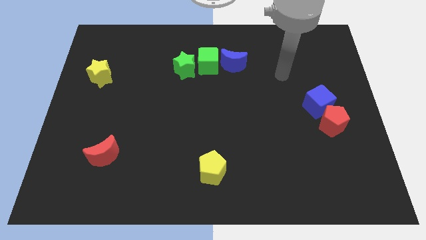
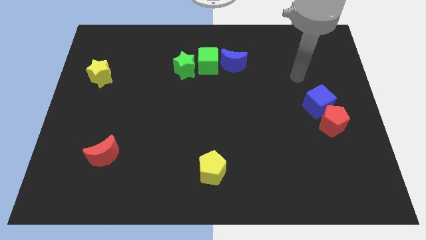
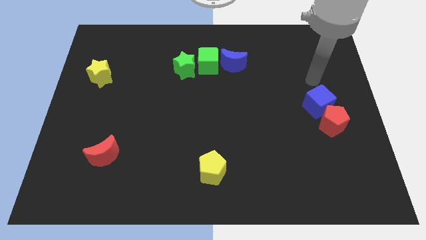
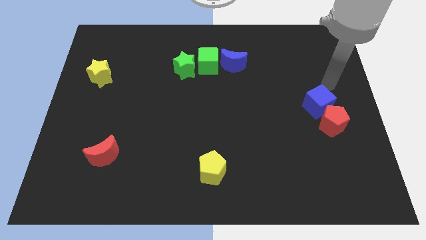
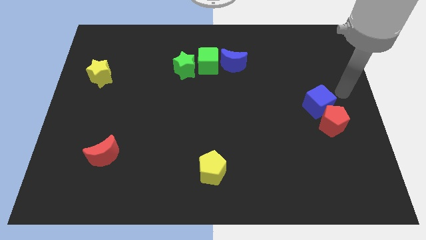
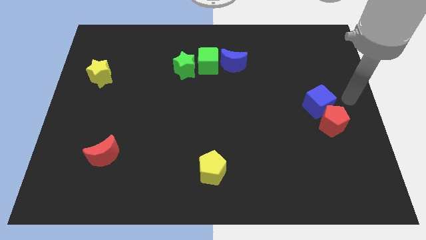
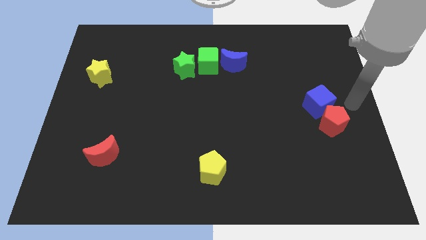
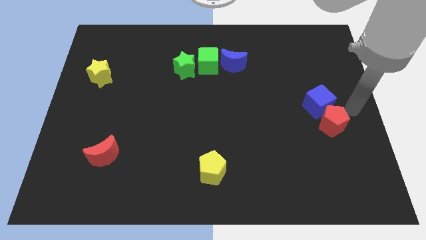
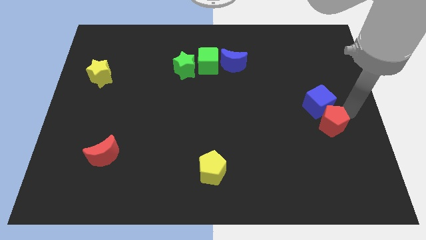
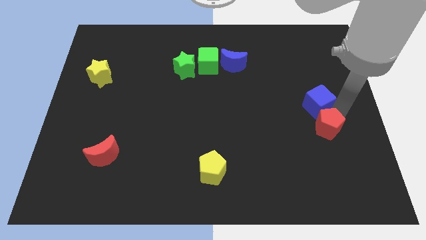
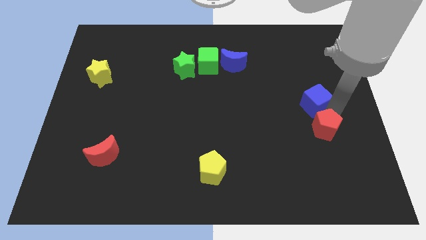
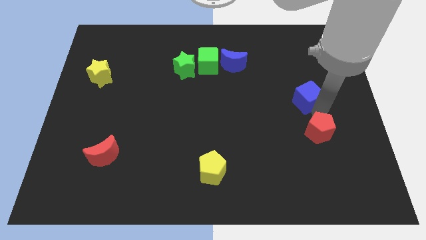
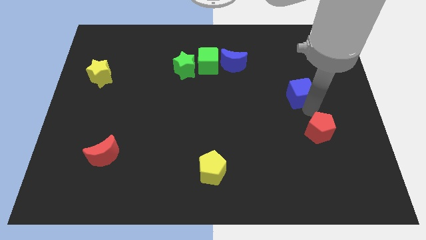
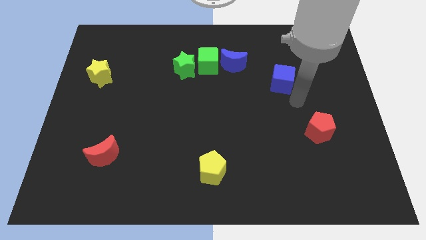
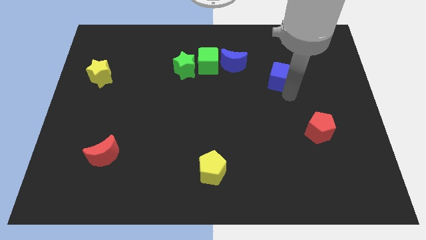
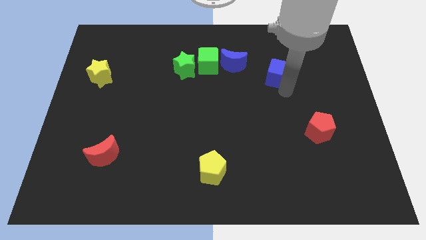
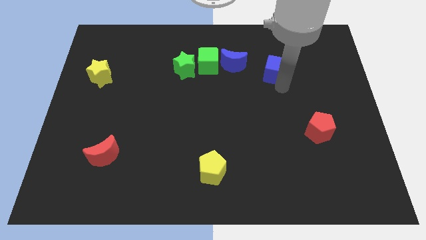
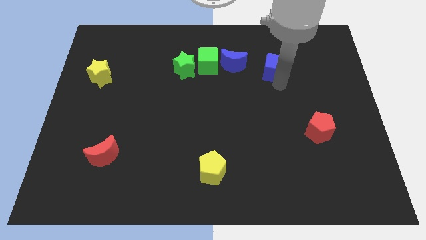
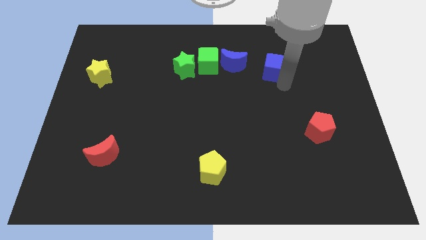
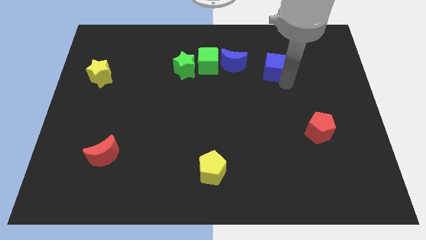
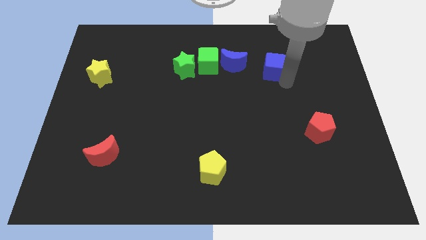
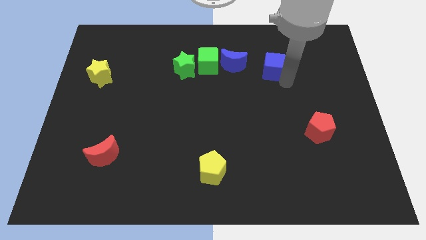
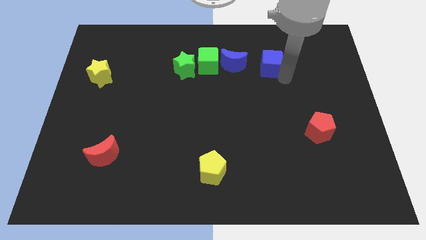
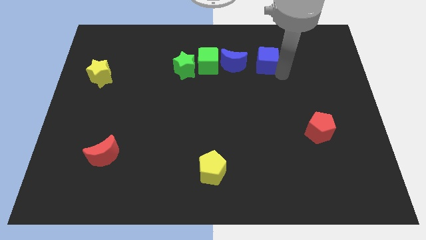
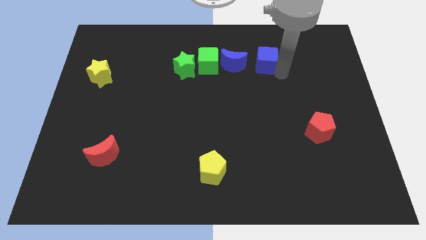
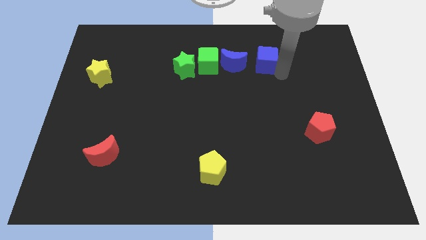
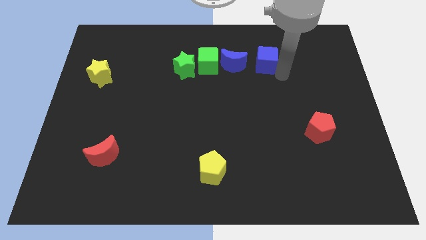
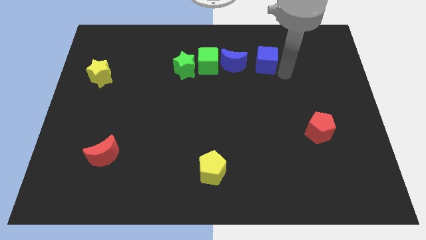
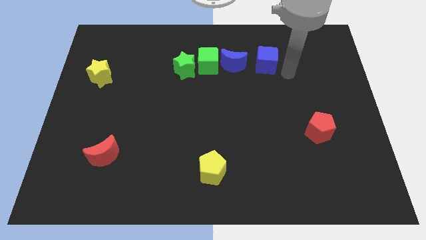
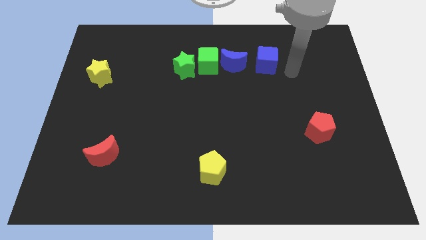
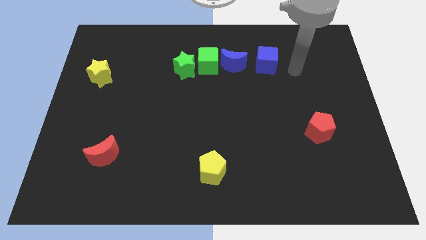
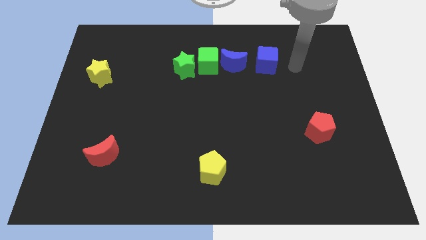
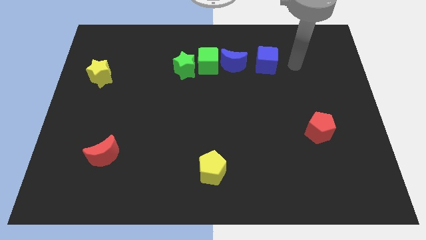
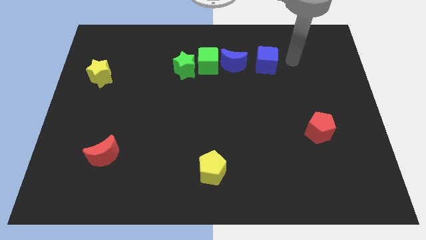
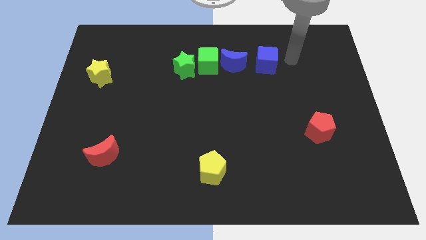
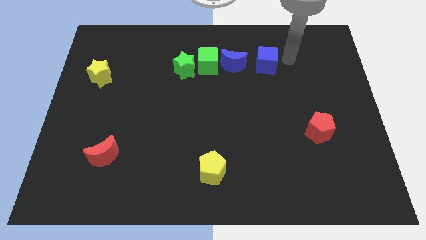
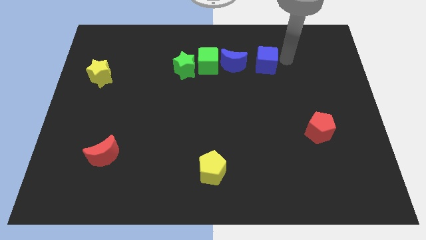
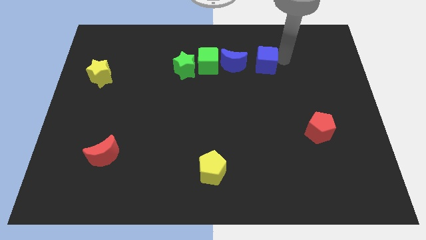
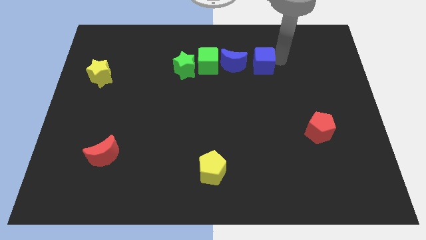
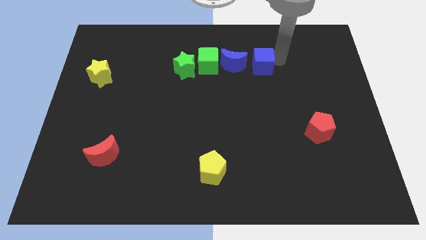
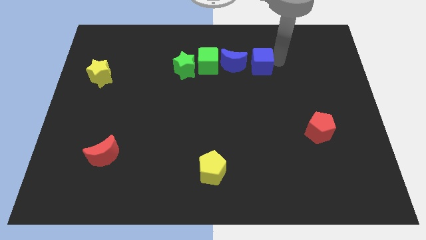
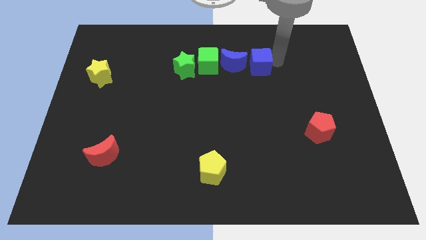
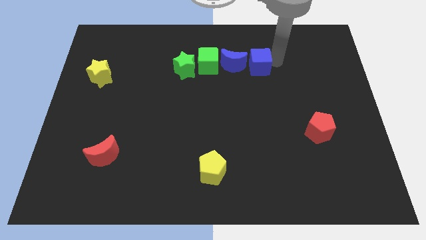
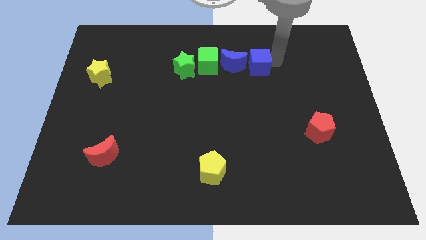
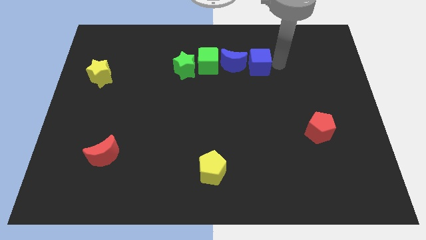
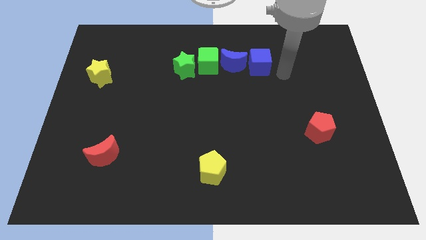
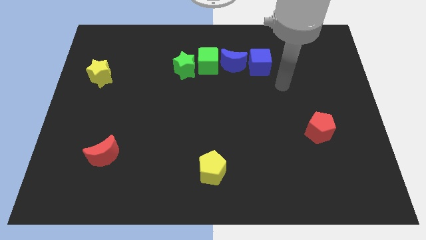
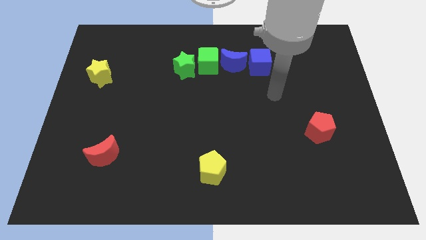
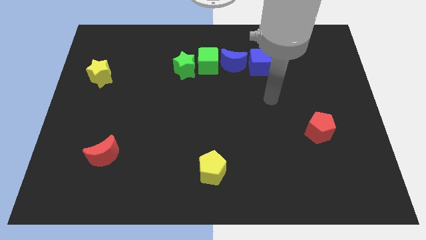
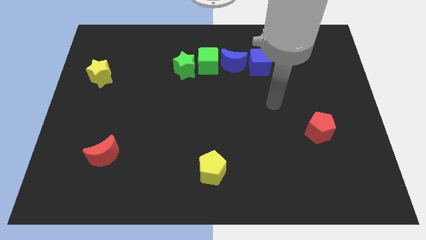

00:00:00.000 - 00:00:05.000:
push the blue cube to the right of the blue crescent

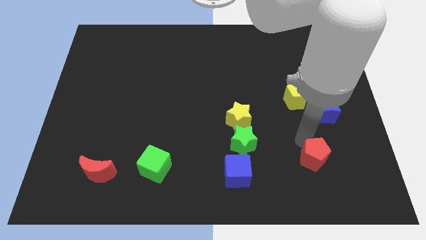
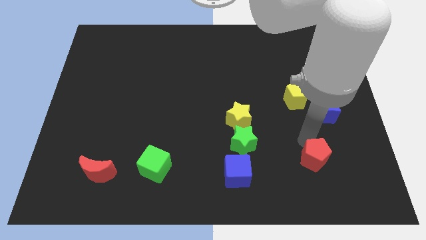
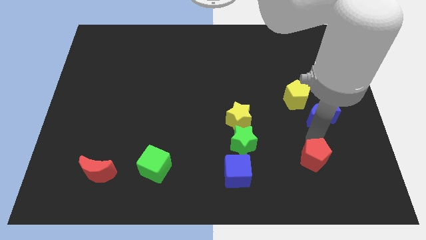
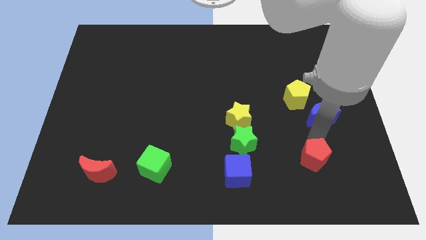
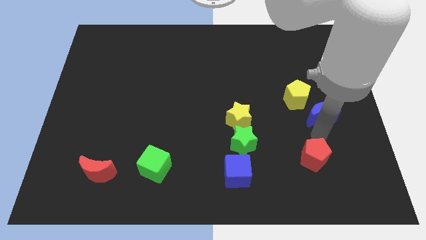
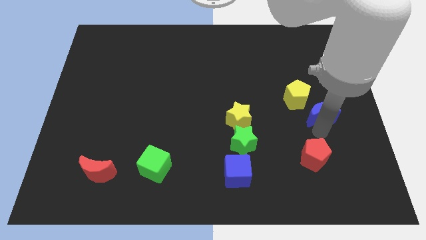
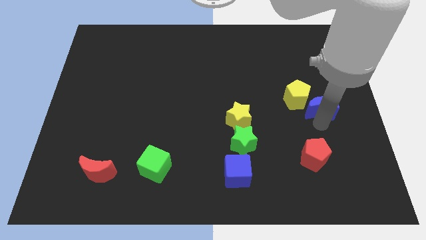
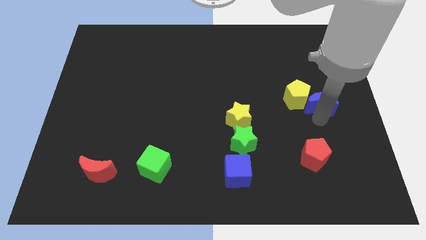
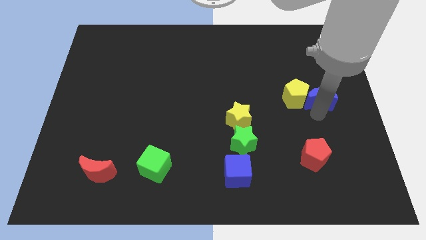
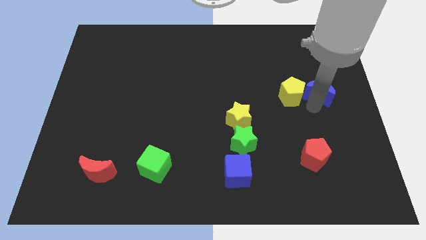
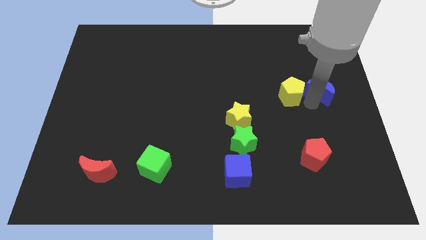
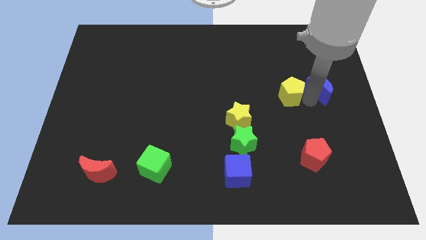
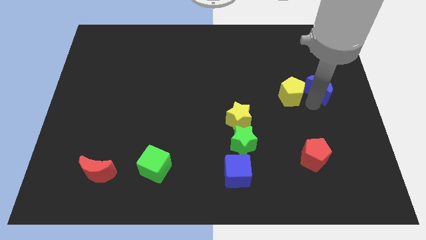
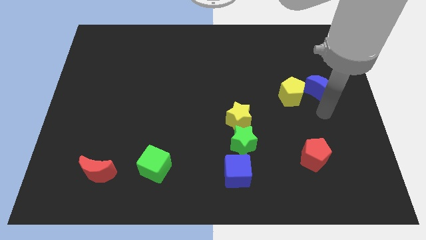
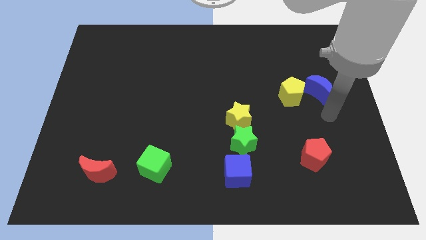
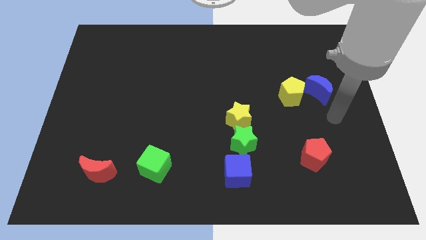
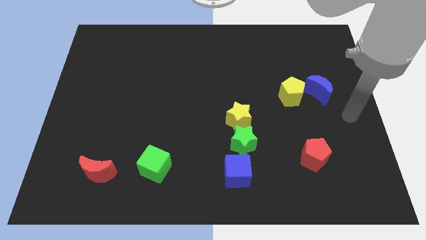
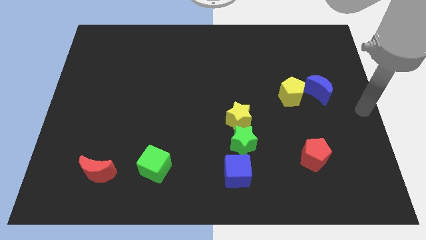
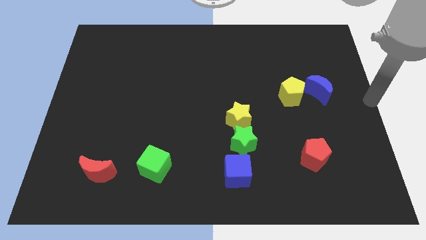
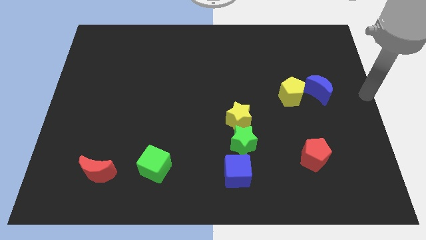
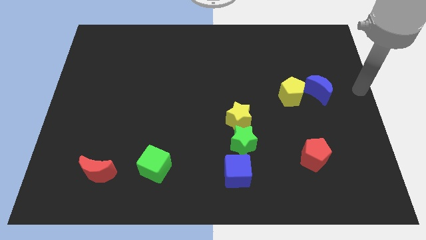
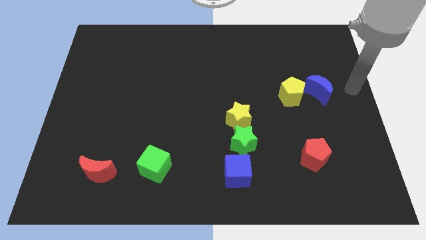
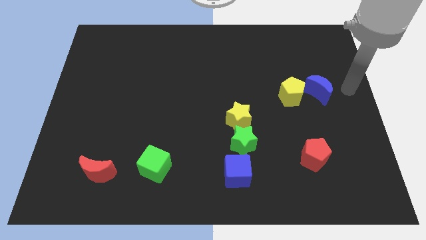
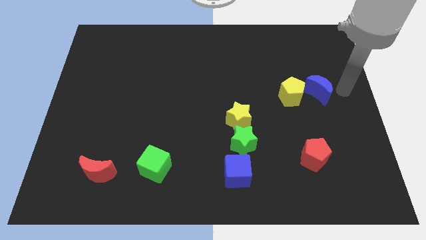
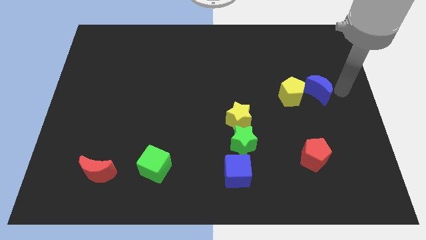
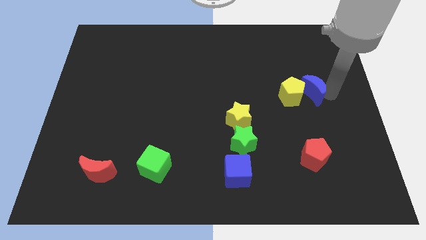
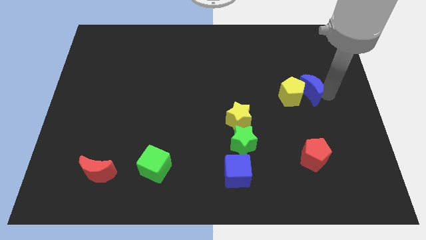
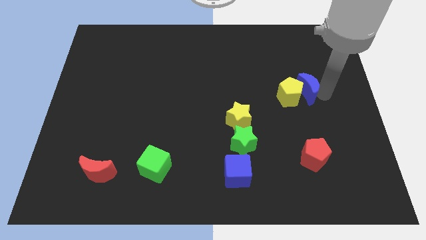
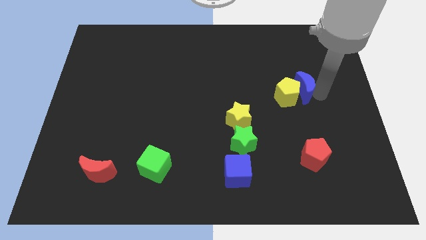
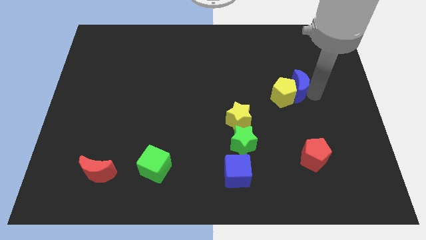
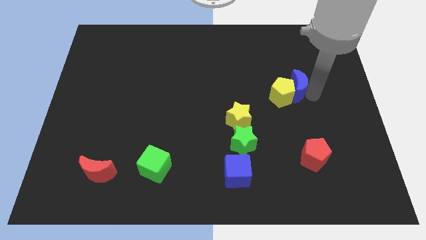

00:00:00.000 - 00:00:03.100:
push the blue crescent into the right side of the yellow pentagon

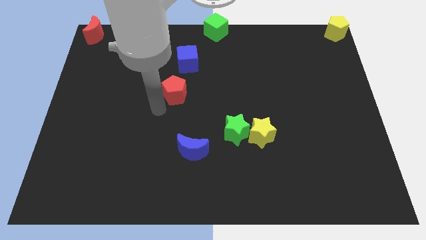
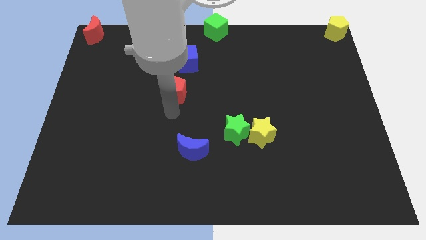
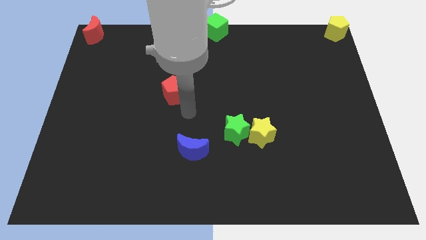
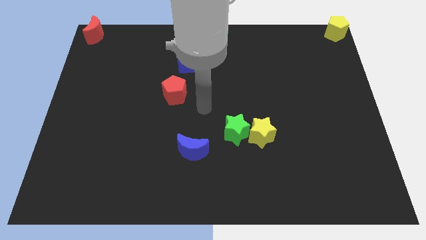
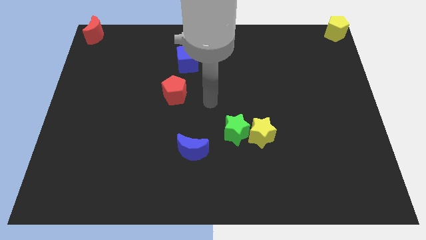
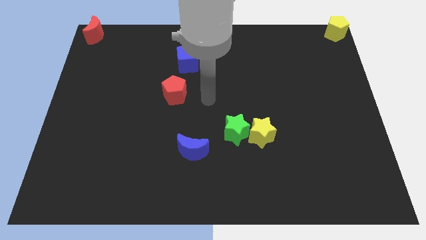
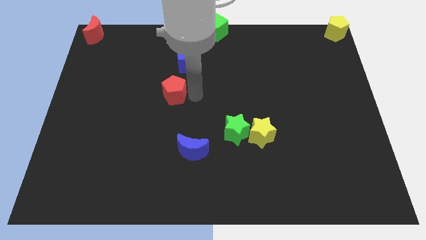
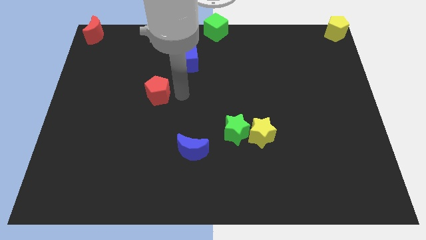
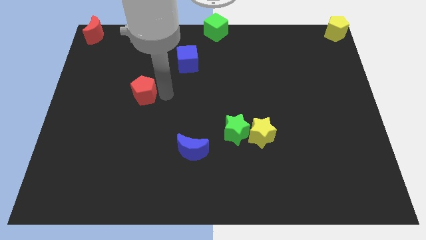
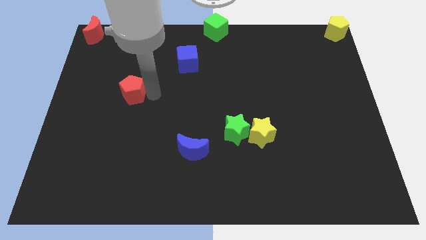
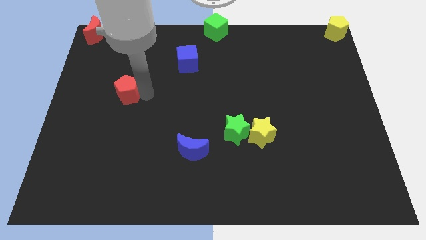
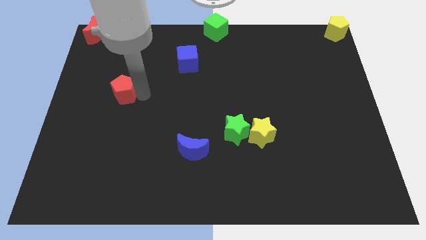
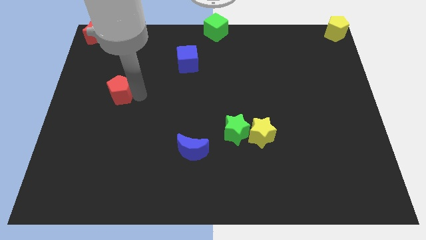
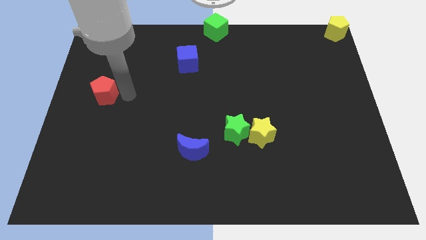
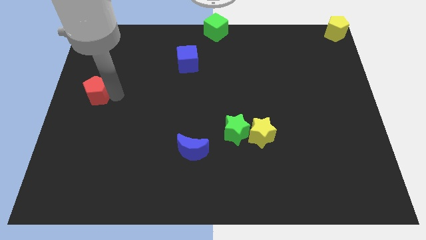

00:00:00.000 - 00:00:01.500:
slightly push the red pentagon towards the left
